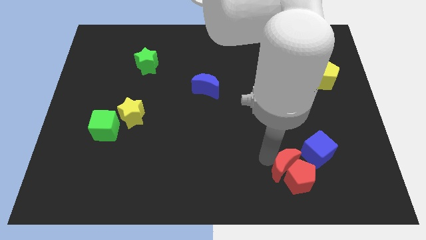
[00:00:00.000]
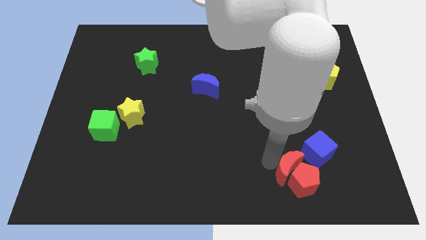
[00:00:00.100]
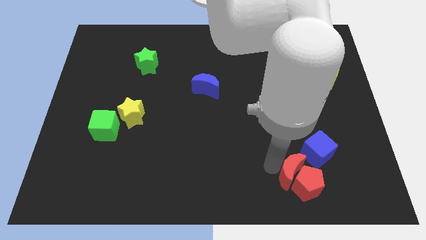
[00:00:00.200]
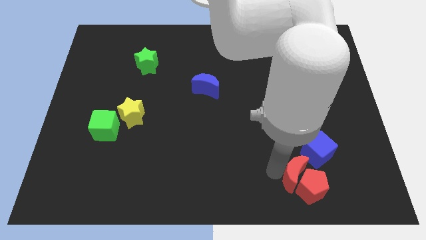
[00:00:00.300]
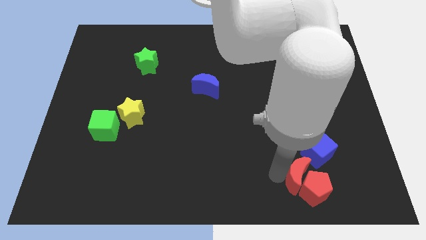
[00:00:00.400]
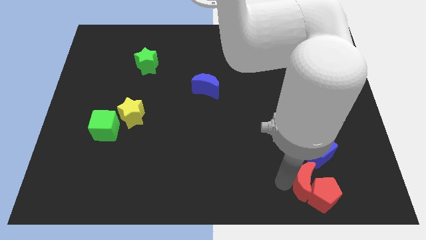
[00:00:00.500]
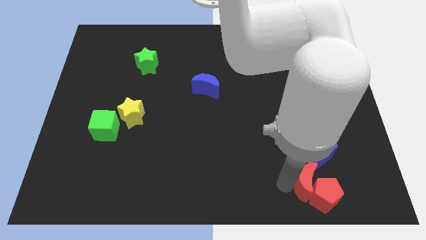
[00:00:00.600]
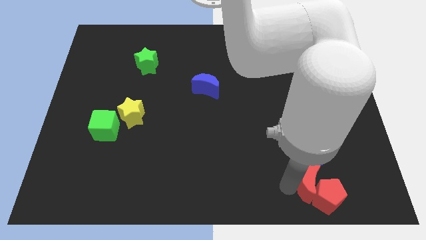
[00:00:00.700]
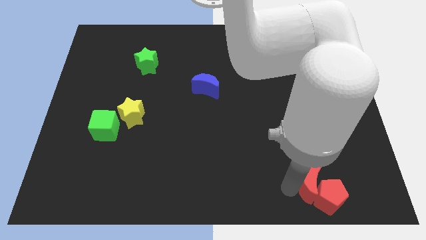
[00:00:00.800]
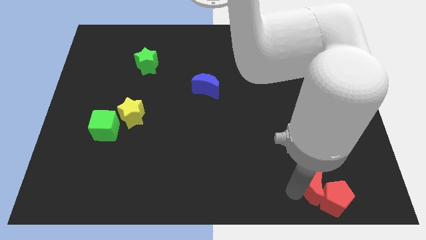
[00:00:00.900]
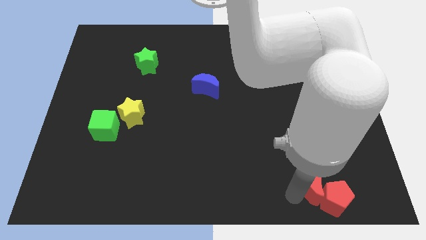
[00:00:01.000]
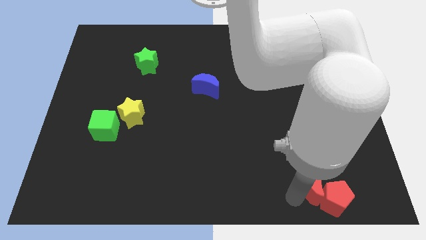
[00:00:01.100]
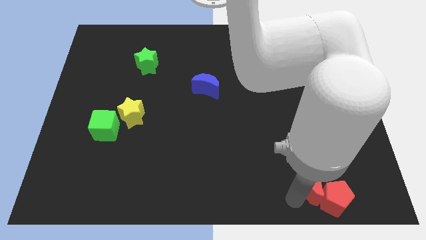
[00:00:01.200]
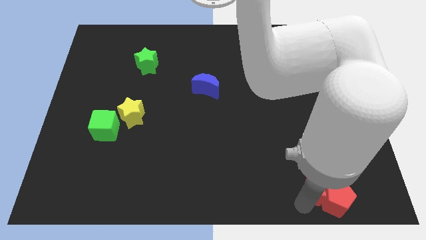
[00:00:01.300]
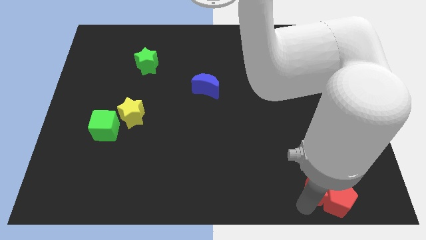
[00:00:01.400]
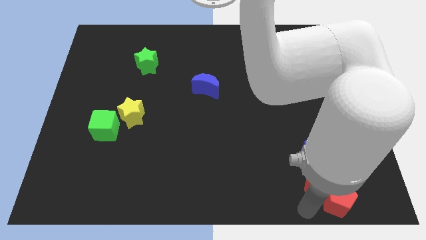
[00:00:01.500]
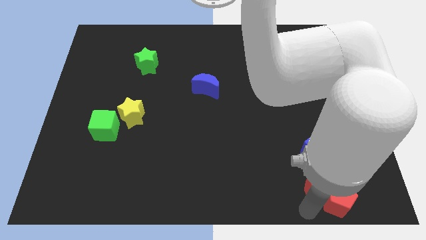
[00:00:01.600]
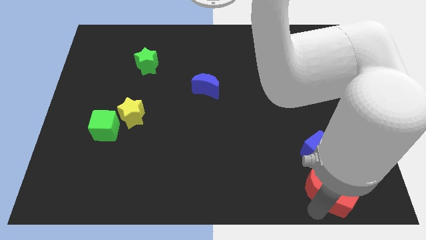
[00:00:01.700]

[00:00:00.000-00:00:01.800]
move the red moon under the blue cube

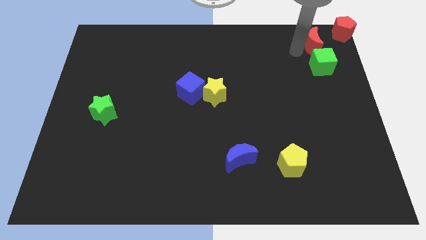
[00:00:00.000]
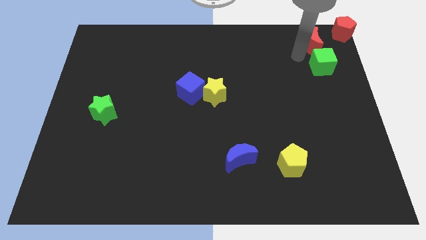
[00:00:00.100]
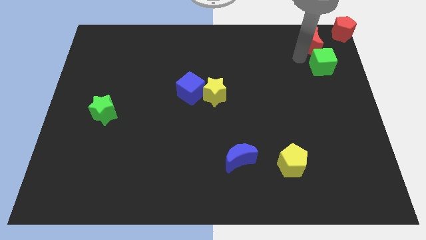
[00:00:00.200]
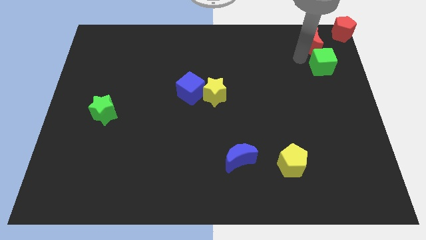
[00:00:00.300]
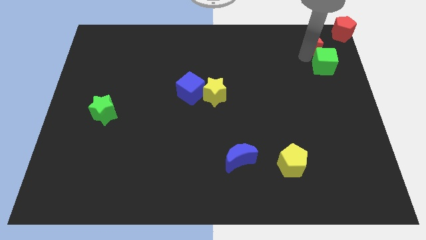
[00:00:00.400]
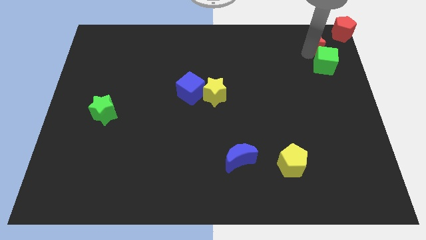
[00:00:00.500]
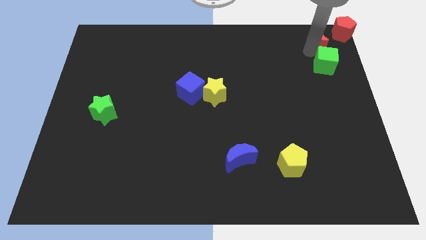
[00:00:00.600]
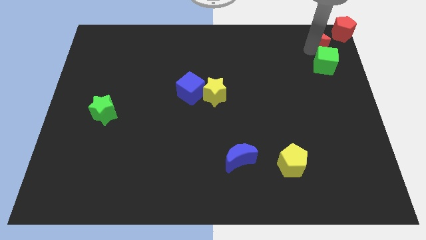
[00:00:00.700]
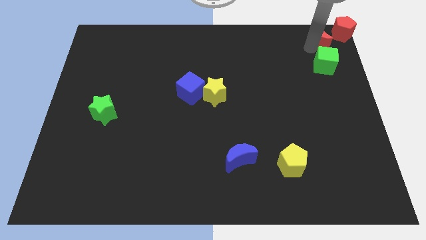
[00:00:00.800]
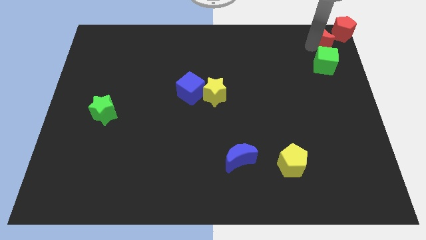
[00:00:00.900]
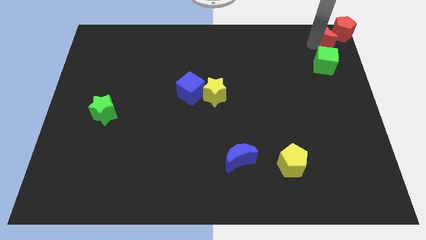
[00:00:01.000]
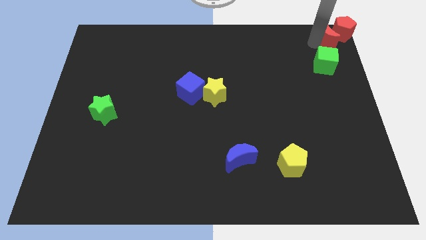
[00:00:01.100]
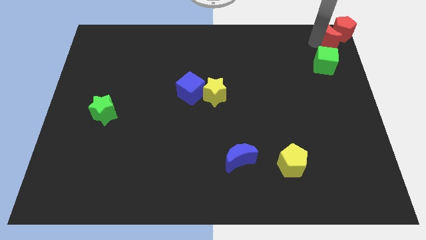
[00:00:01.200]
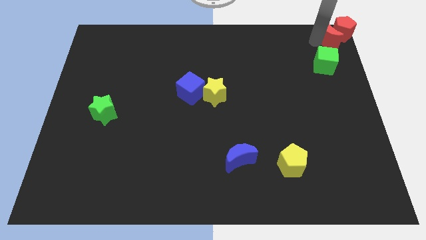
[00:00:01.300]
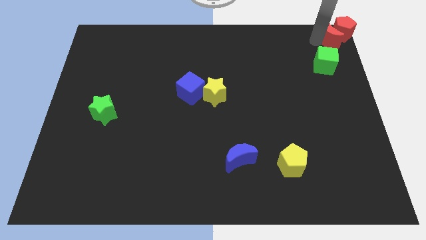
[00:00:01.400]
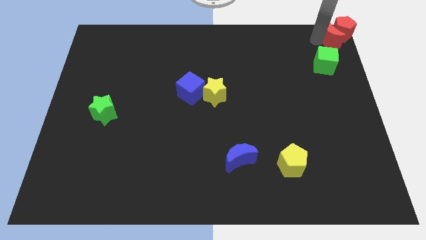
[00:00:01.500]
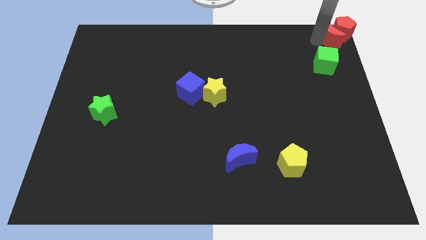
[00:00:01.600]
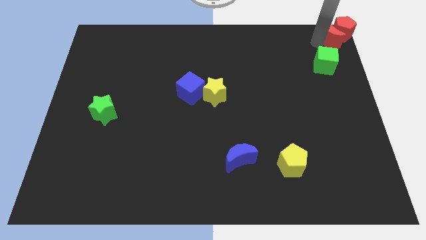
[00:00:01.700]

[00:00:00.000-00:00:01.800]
move the red crescent to the top right corner

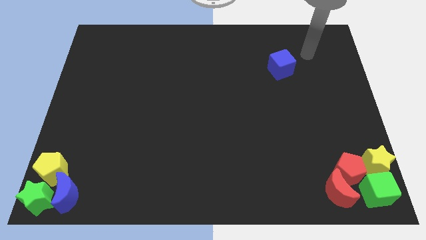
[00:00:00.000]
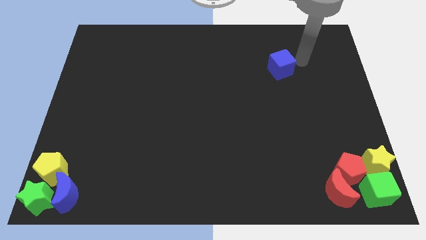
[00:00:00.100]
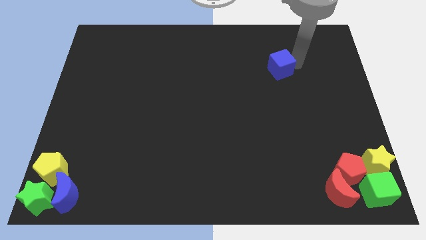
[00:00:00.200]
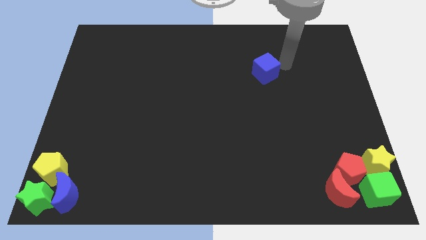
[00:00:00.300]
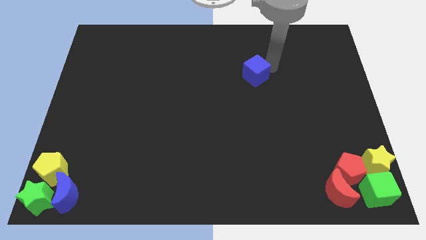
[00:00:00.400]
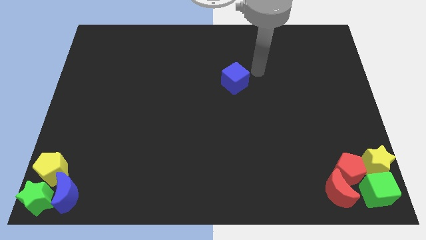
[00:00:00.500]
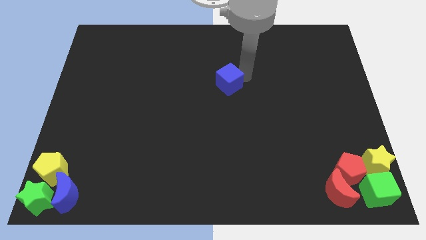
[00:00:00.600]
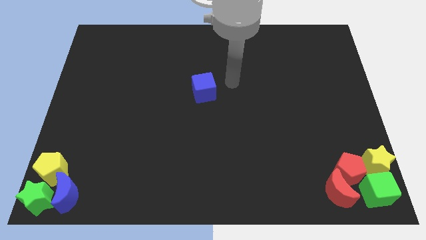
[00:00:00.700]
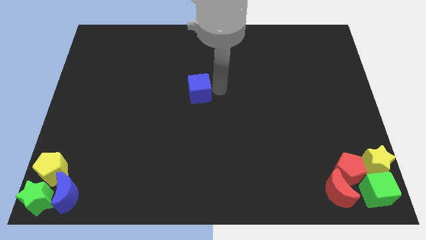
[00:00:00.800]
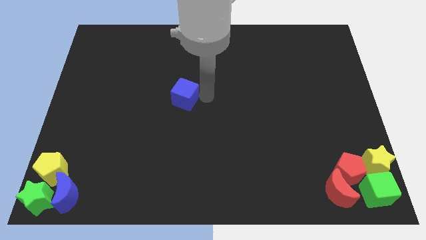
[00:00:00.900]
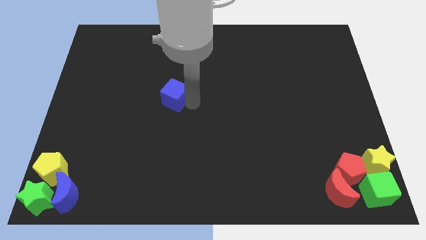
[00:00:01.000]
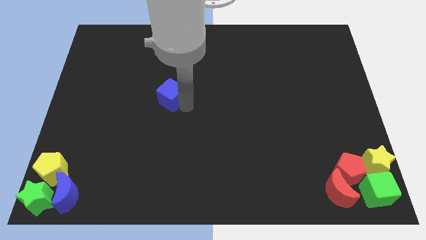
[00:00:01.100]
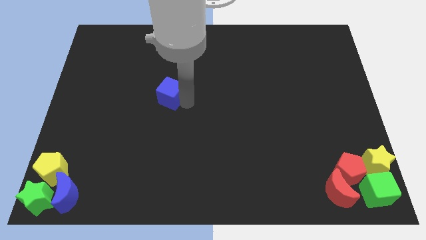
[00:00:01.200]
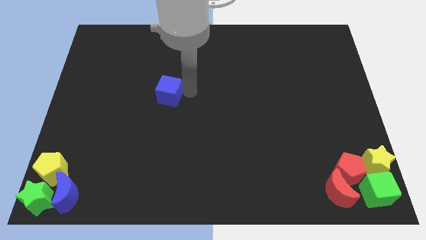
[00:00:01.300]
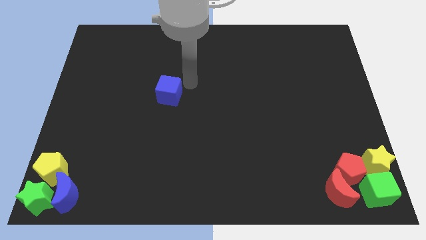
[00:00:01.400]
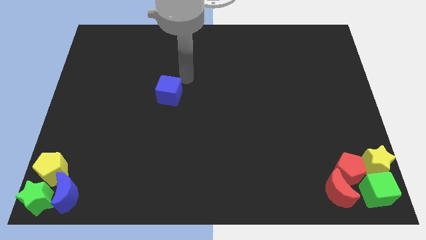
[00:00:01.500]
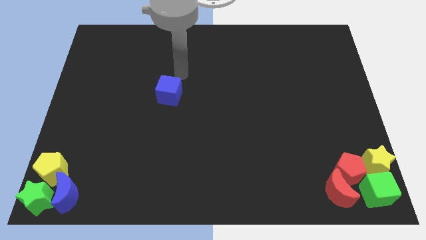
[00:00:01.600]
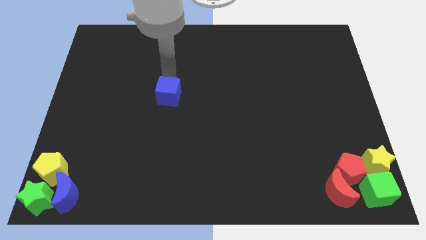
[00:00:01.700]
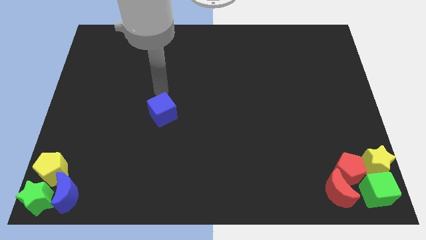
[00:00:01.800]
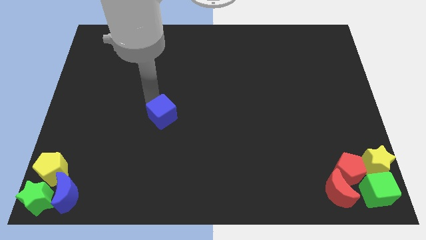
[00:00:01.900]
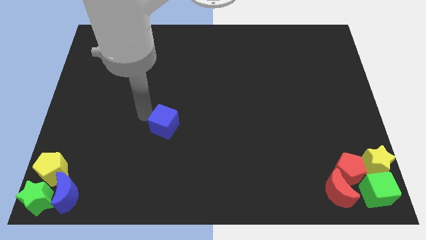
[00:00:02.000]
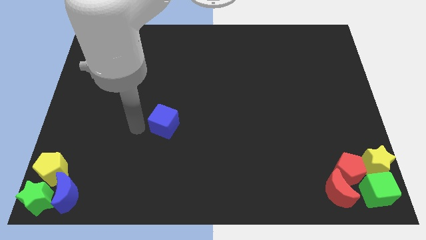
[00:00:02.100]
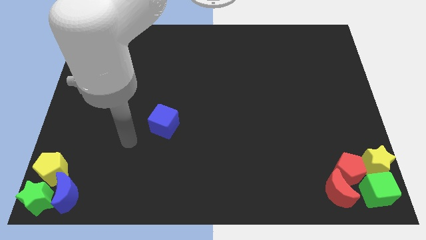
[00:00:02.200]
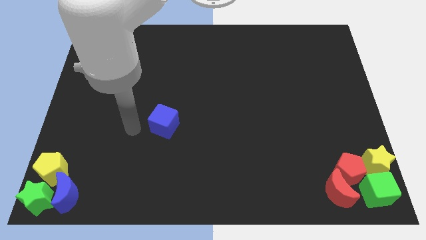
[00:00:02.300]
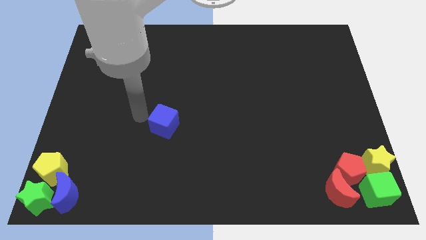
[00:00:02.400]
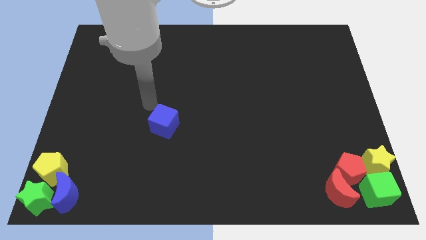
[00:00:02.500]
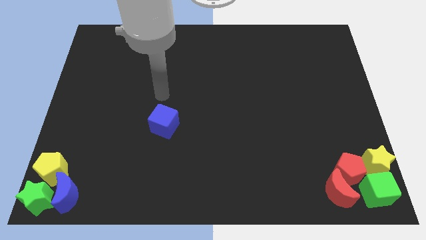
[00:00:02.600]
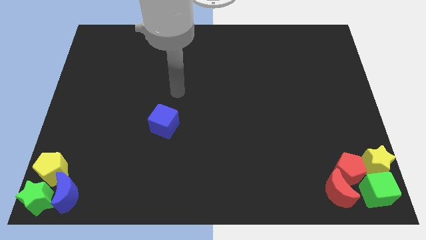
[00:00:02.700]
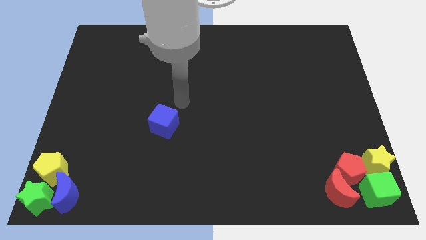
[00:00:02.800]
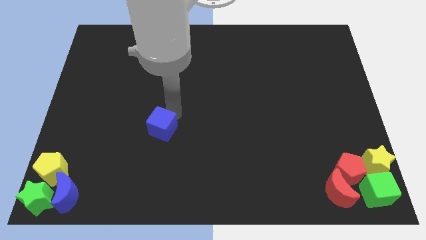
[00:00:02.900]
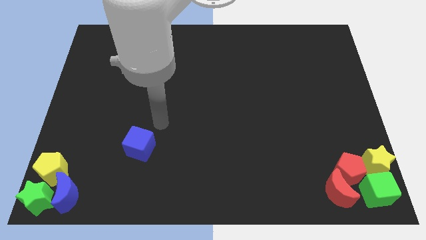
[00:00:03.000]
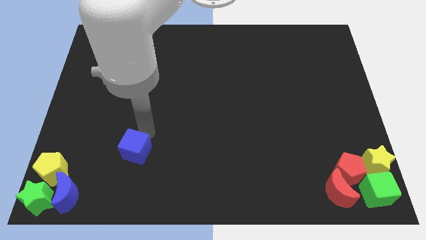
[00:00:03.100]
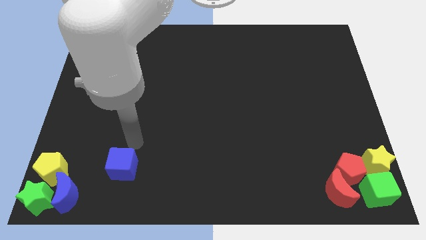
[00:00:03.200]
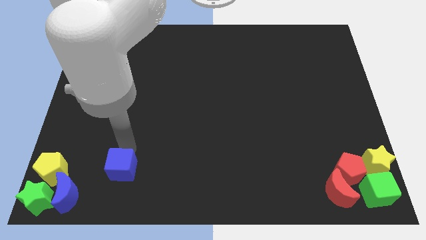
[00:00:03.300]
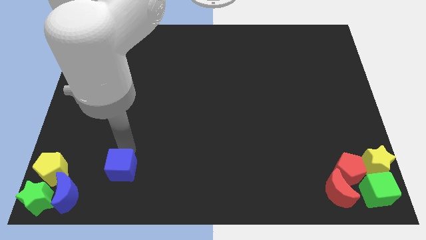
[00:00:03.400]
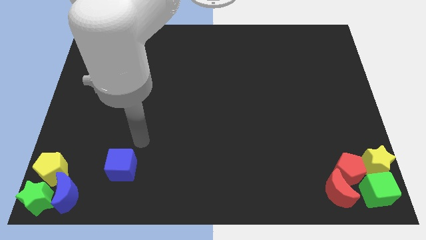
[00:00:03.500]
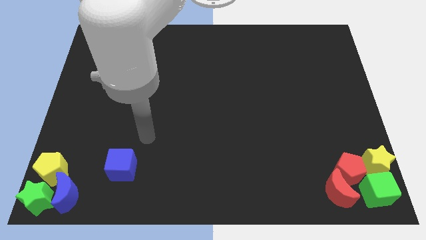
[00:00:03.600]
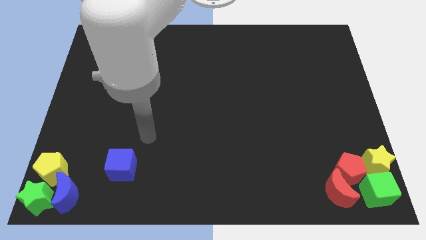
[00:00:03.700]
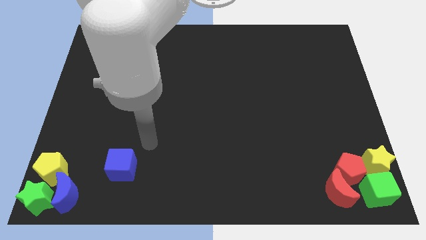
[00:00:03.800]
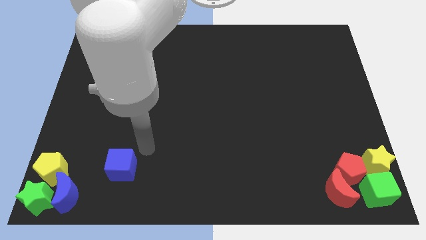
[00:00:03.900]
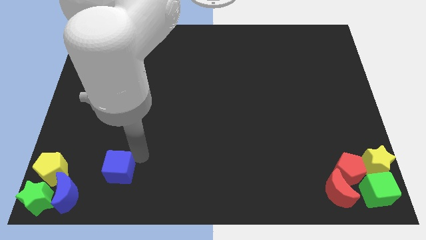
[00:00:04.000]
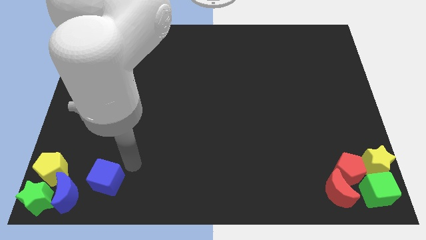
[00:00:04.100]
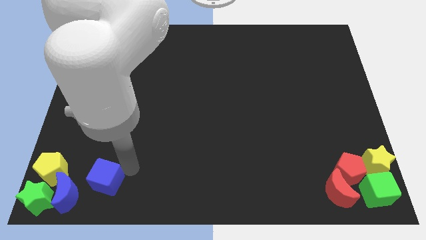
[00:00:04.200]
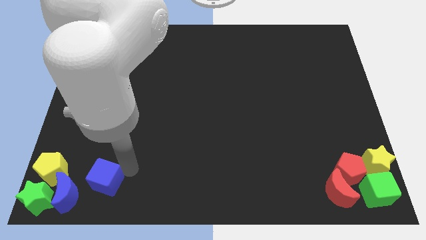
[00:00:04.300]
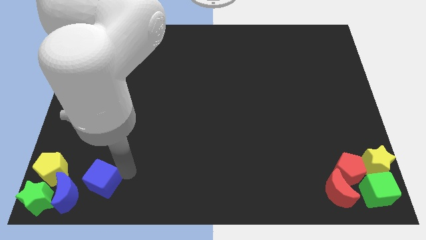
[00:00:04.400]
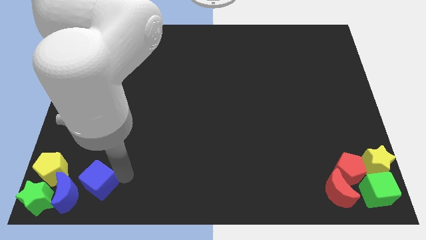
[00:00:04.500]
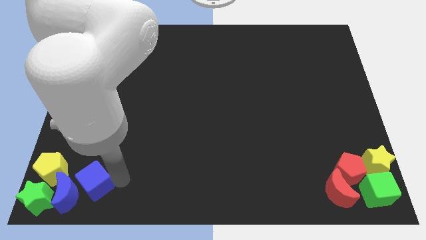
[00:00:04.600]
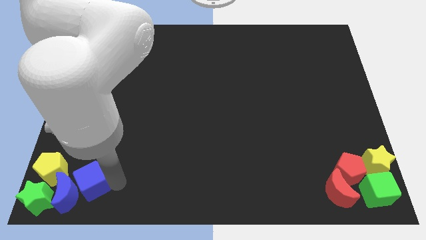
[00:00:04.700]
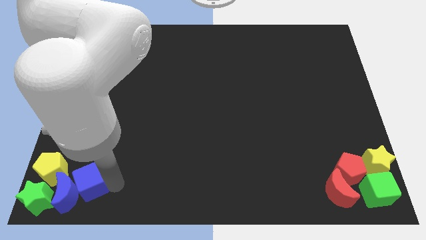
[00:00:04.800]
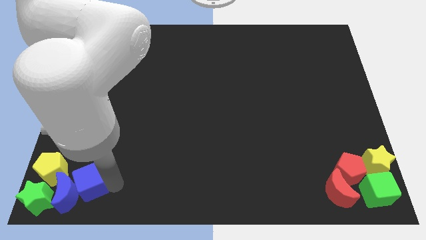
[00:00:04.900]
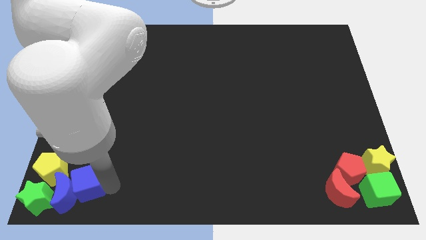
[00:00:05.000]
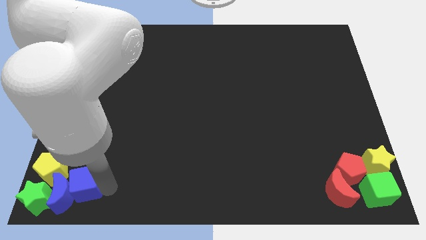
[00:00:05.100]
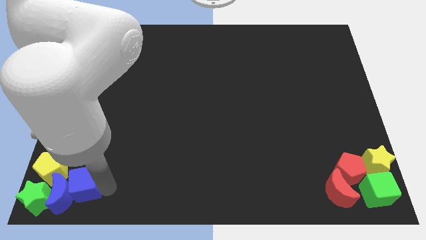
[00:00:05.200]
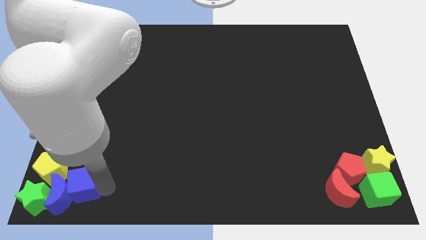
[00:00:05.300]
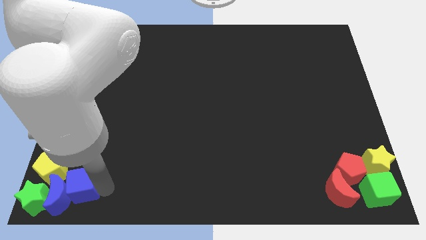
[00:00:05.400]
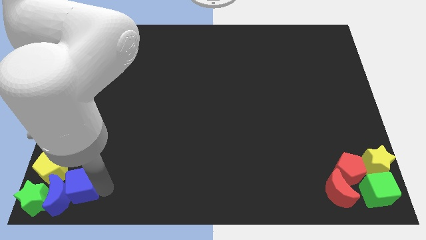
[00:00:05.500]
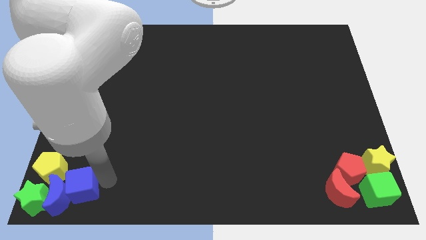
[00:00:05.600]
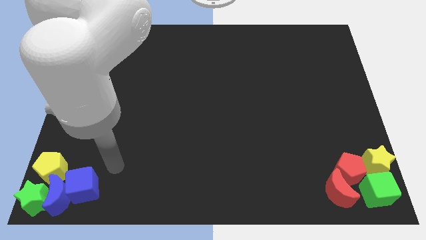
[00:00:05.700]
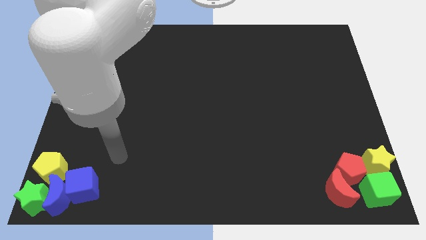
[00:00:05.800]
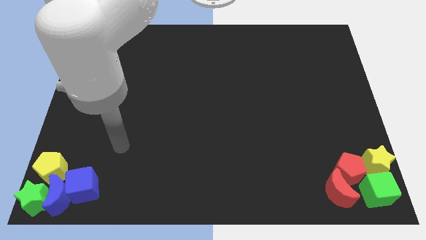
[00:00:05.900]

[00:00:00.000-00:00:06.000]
push the blue cube into the blue crescent
